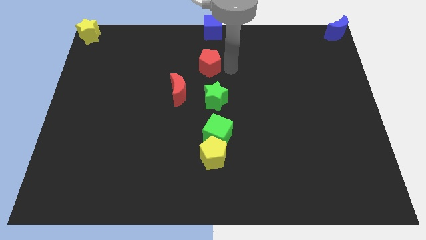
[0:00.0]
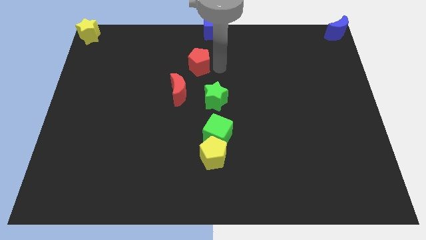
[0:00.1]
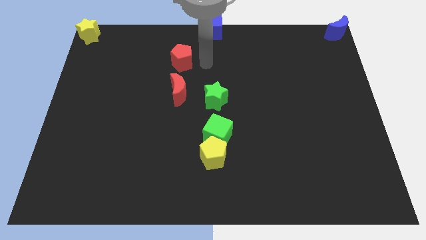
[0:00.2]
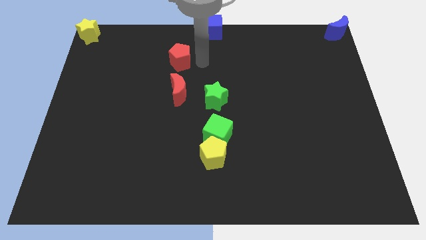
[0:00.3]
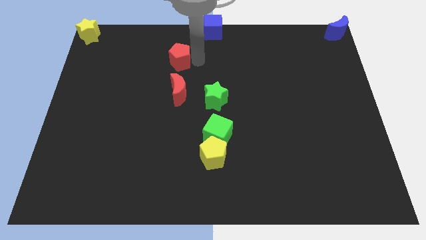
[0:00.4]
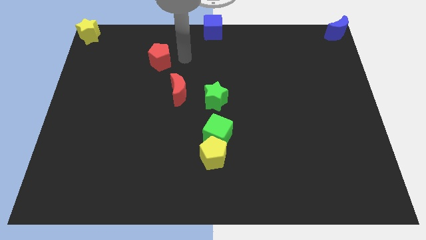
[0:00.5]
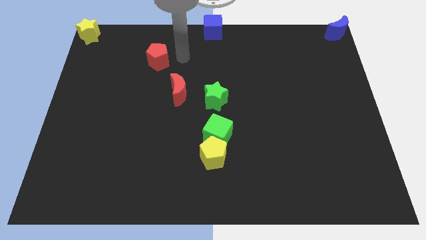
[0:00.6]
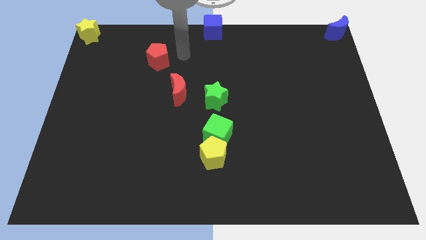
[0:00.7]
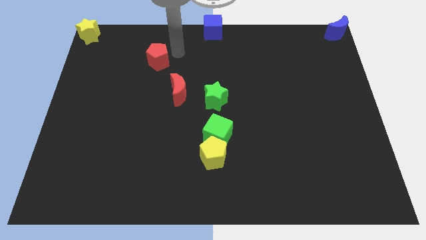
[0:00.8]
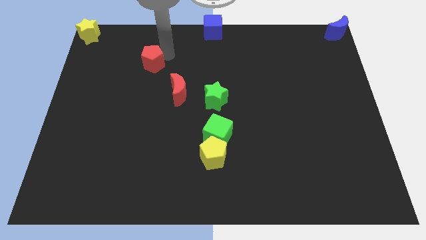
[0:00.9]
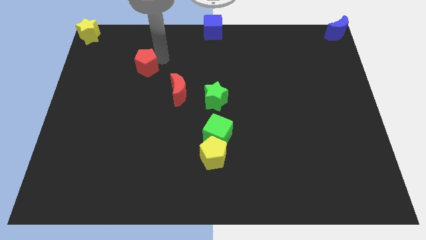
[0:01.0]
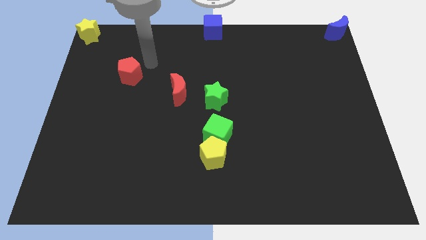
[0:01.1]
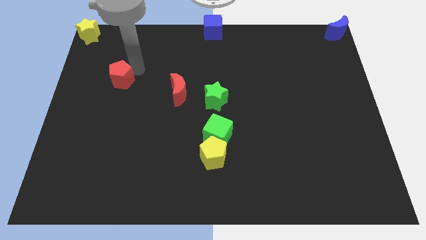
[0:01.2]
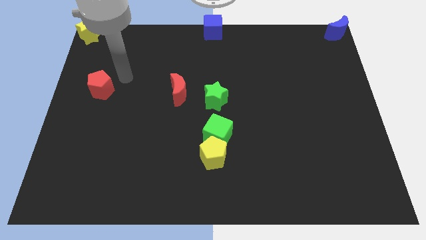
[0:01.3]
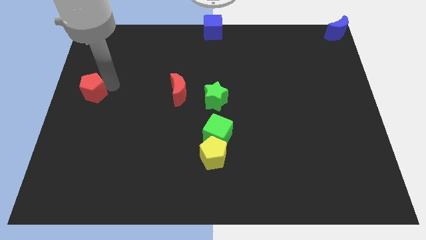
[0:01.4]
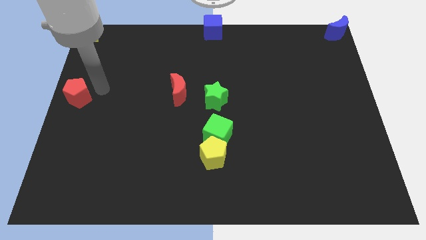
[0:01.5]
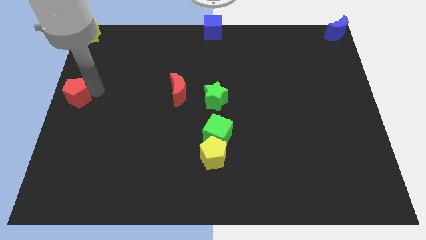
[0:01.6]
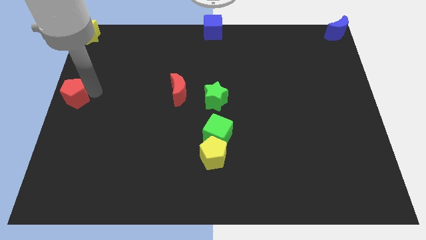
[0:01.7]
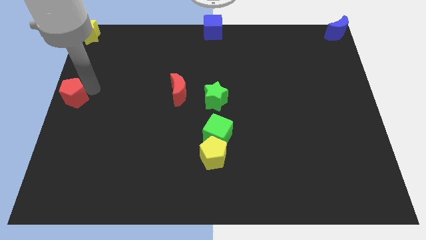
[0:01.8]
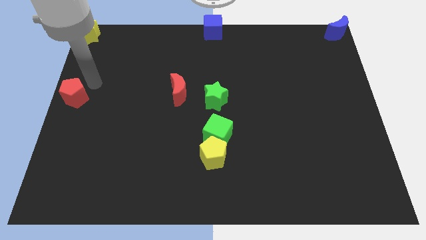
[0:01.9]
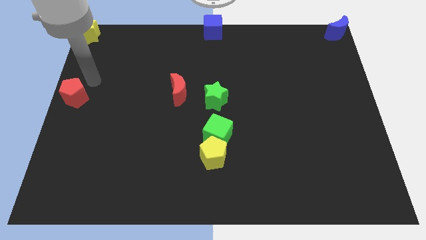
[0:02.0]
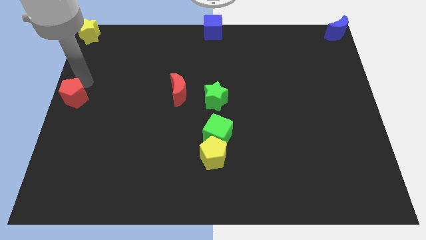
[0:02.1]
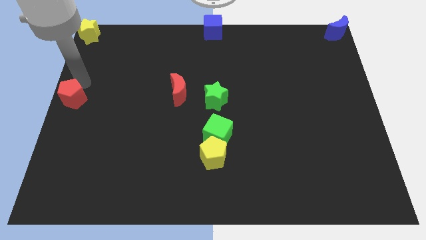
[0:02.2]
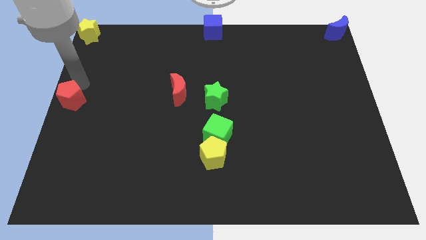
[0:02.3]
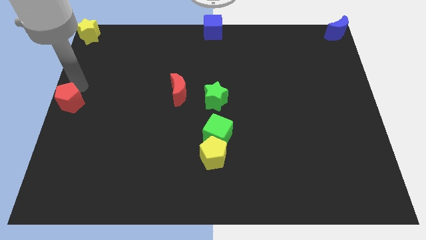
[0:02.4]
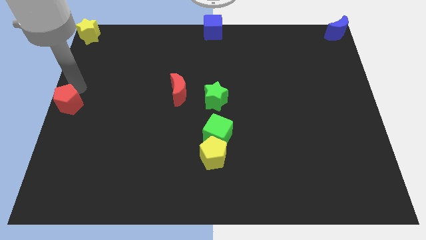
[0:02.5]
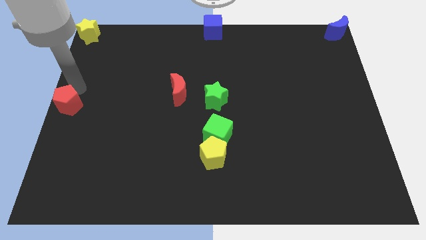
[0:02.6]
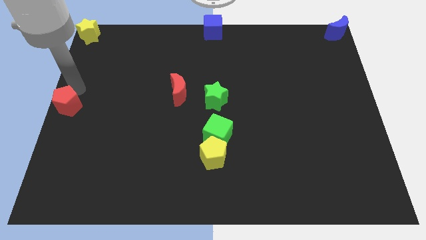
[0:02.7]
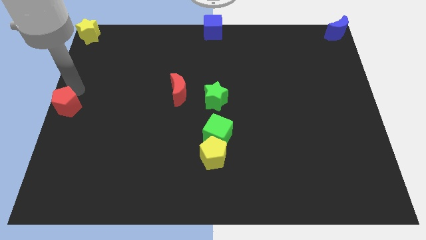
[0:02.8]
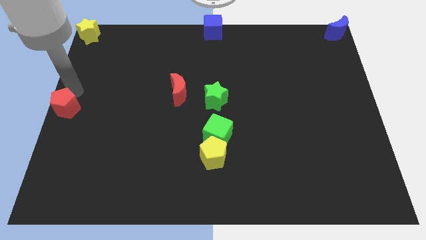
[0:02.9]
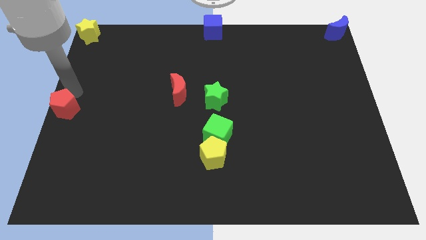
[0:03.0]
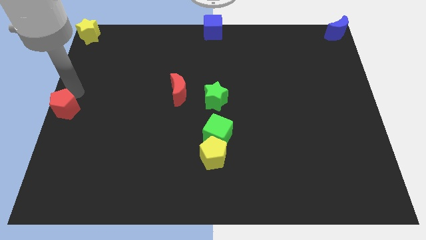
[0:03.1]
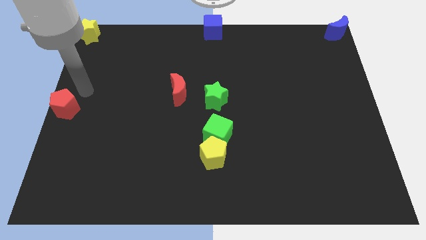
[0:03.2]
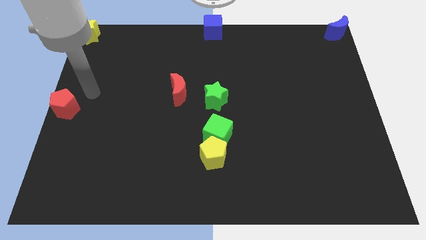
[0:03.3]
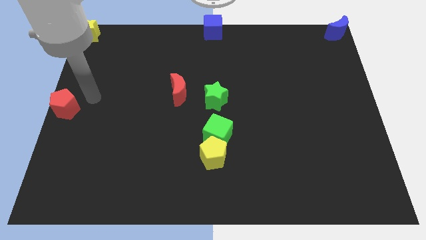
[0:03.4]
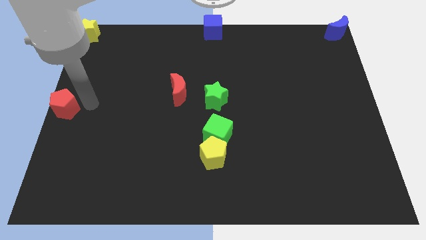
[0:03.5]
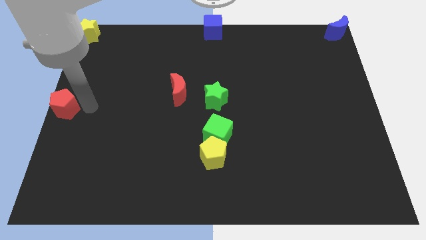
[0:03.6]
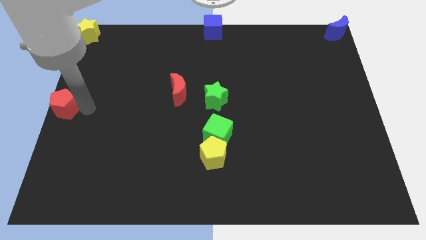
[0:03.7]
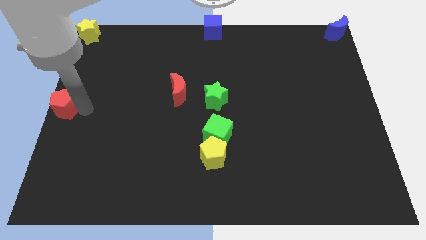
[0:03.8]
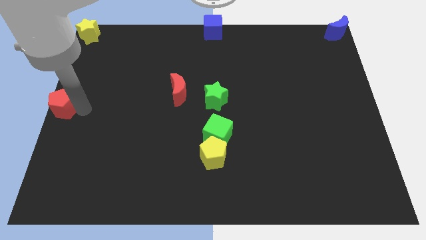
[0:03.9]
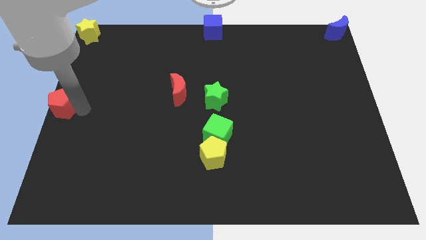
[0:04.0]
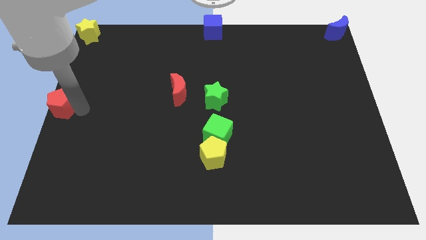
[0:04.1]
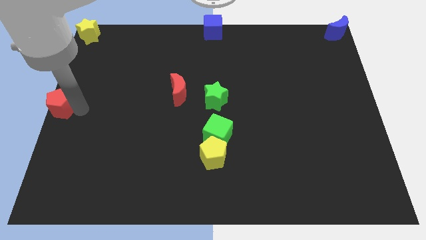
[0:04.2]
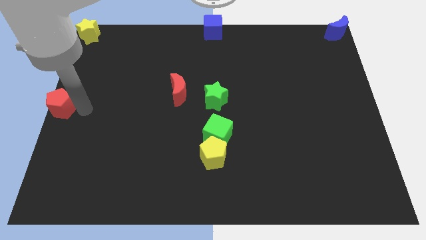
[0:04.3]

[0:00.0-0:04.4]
move the red pentagon to the center left of the table

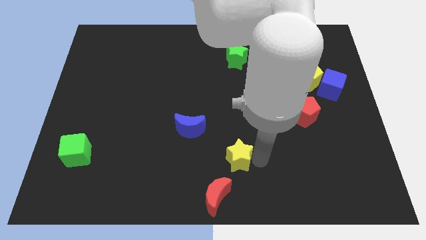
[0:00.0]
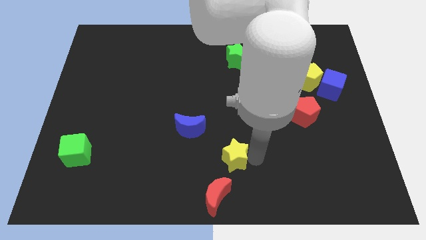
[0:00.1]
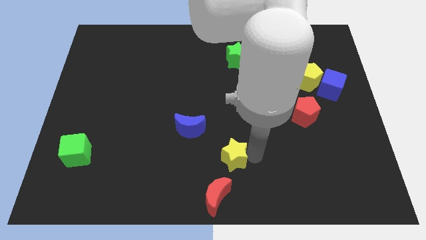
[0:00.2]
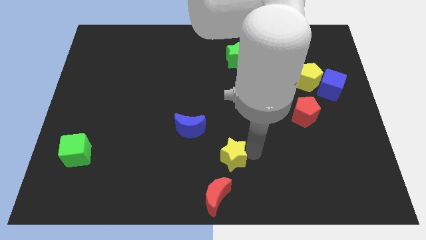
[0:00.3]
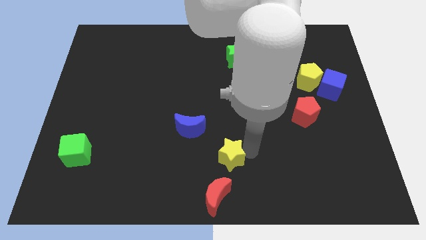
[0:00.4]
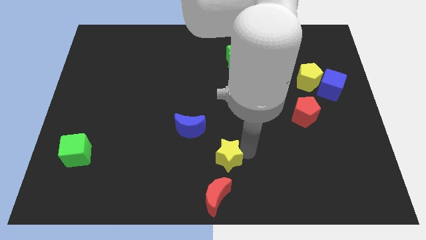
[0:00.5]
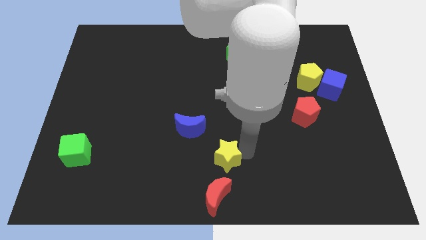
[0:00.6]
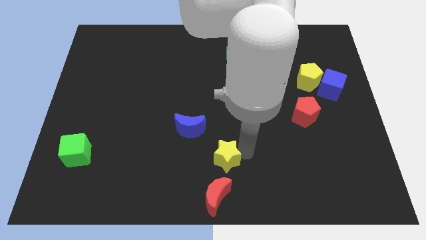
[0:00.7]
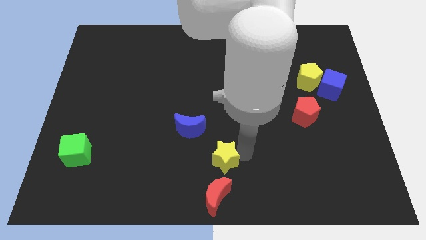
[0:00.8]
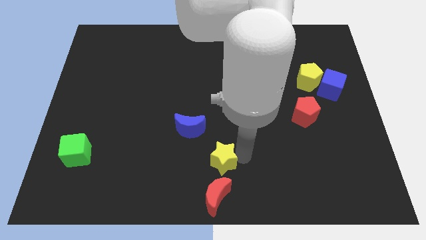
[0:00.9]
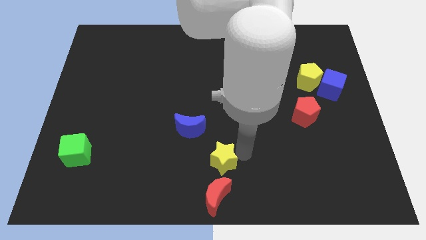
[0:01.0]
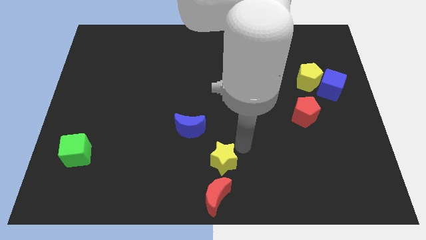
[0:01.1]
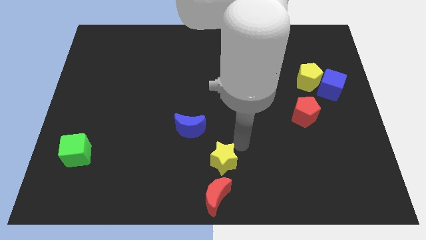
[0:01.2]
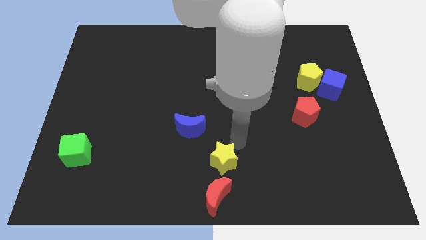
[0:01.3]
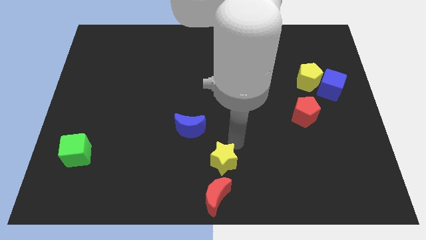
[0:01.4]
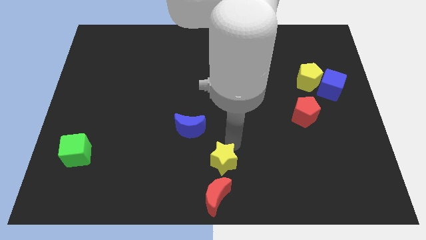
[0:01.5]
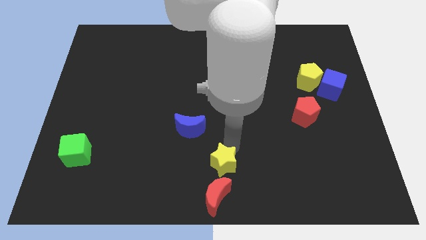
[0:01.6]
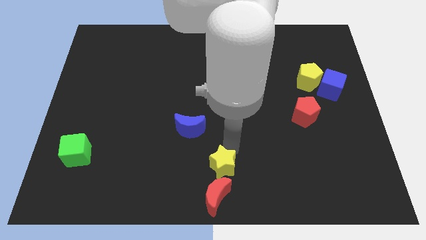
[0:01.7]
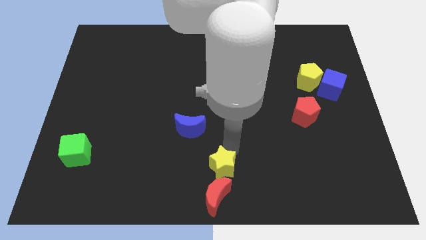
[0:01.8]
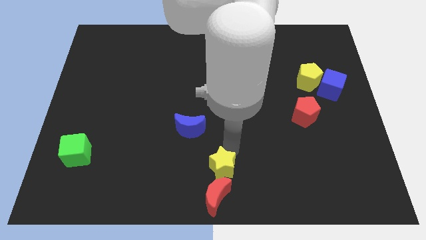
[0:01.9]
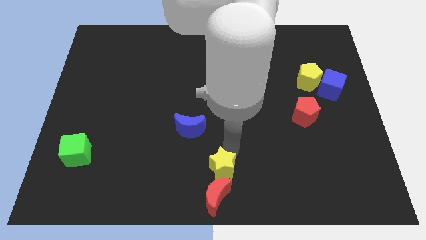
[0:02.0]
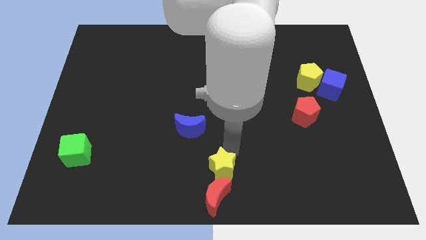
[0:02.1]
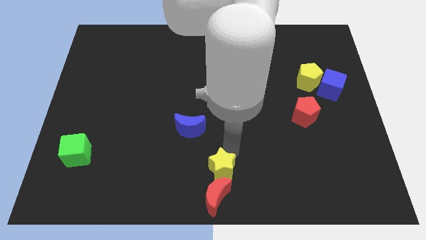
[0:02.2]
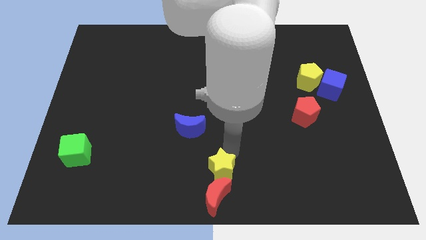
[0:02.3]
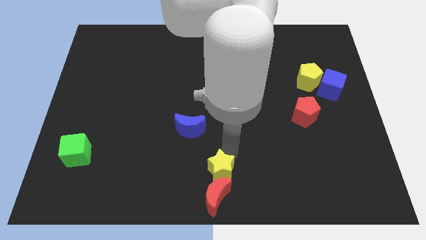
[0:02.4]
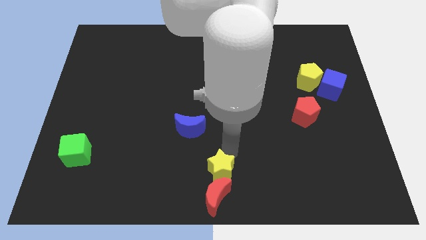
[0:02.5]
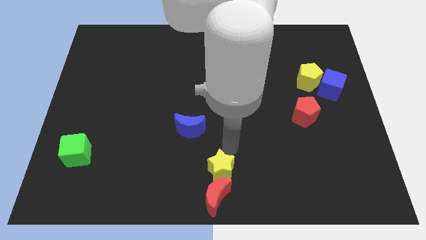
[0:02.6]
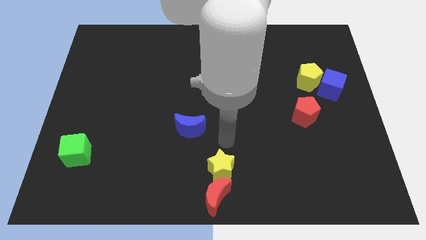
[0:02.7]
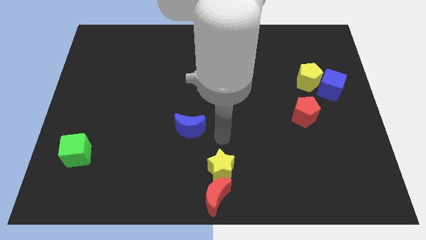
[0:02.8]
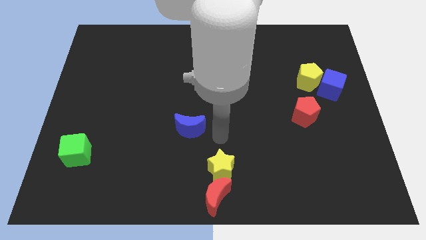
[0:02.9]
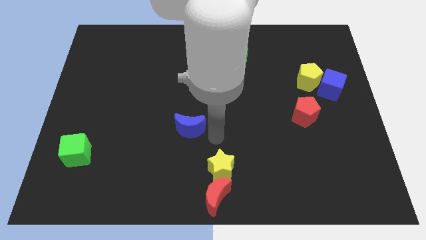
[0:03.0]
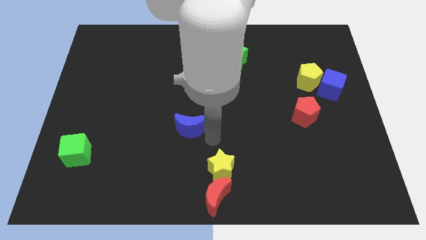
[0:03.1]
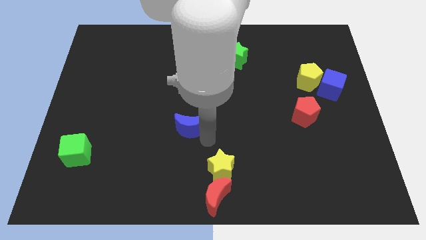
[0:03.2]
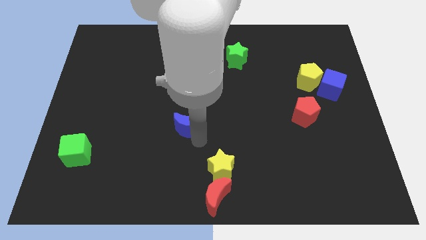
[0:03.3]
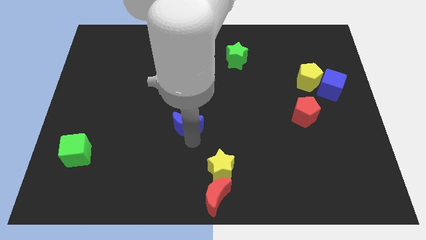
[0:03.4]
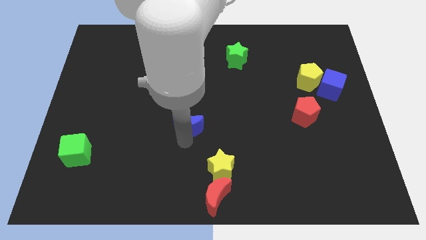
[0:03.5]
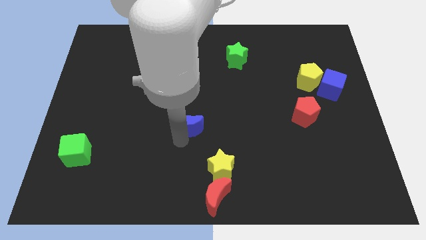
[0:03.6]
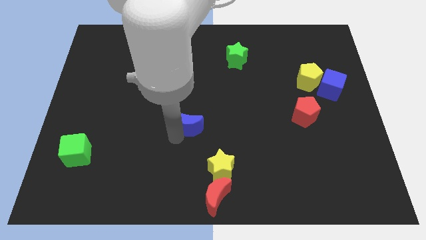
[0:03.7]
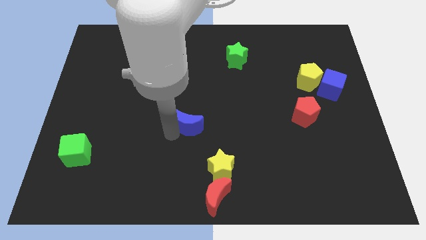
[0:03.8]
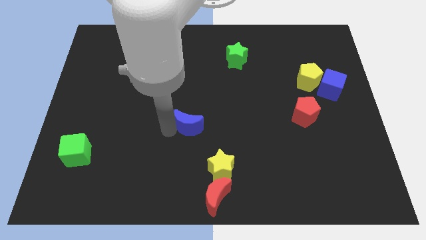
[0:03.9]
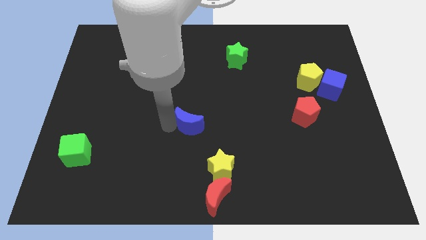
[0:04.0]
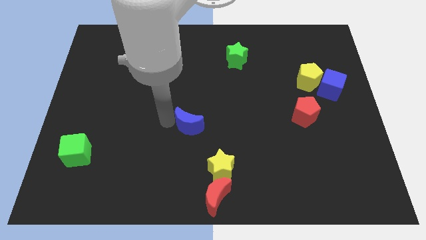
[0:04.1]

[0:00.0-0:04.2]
move yellow star close to red moon
